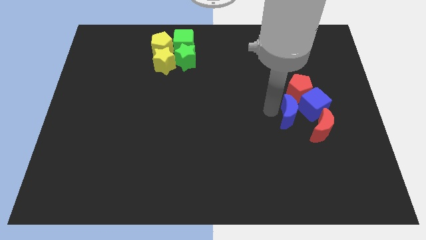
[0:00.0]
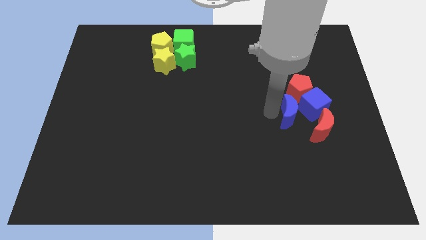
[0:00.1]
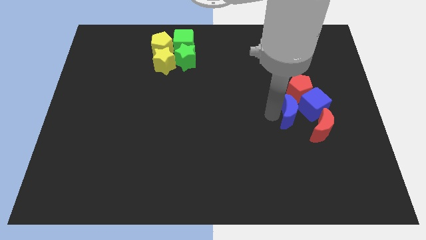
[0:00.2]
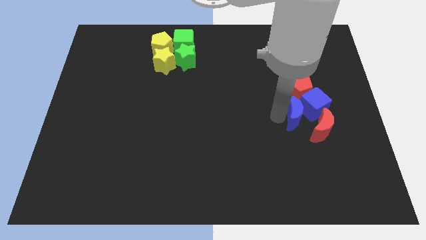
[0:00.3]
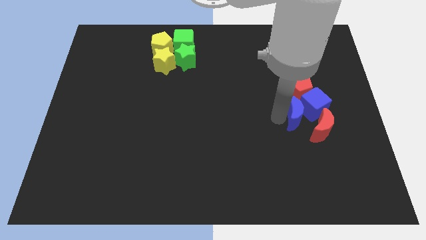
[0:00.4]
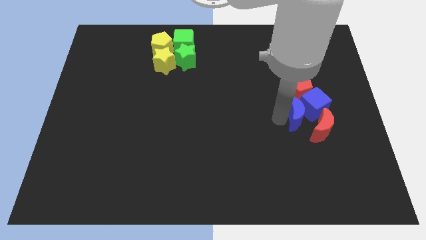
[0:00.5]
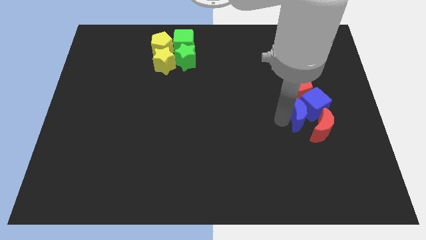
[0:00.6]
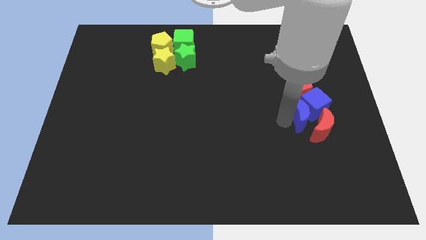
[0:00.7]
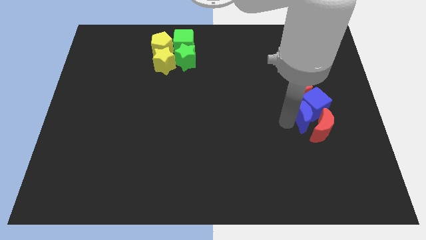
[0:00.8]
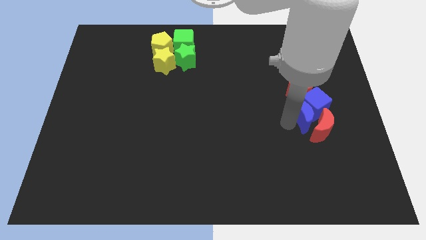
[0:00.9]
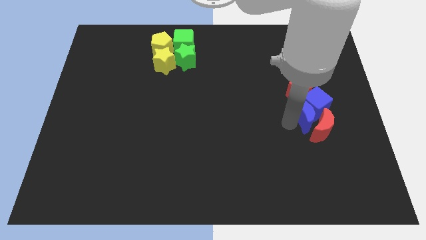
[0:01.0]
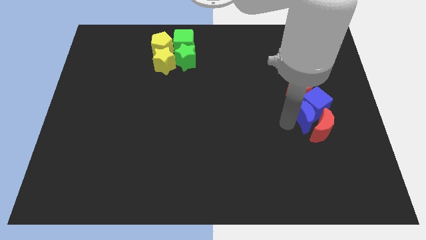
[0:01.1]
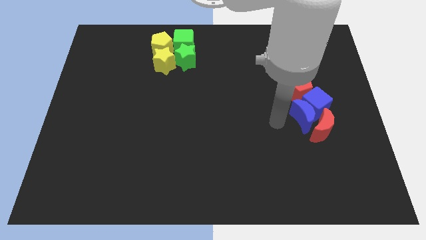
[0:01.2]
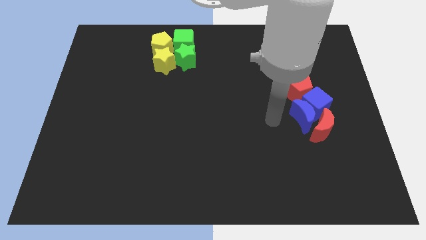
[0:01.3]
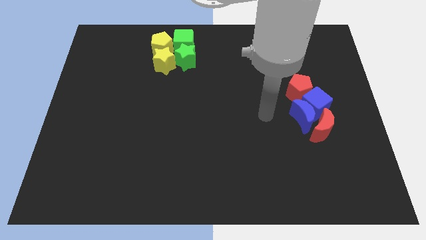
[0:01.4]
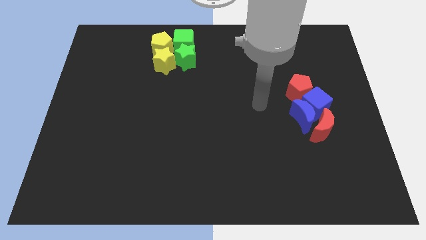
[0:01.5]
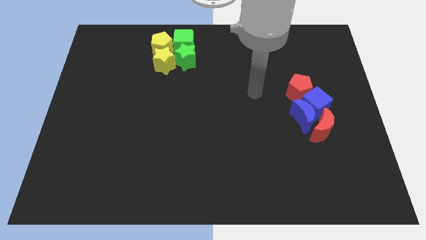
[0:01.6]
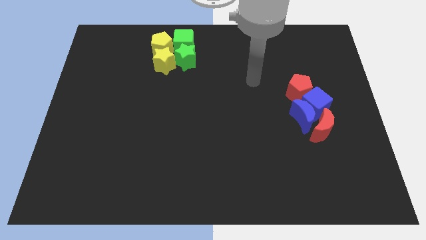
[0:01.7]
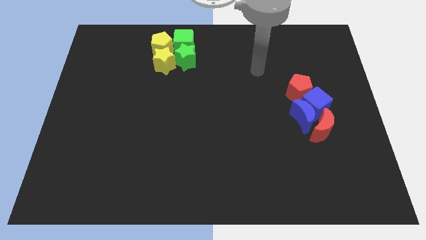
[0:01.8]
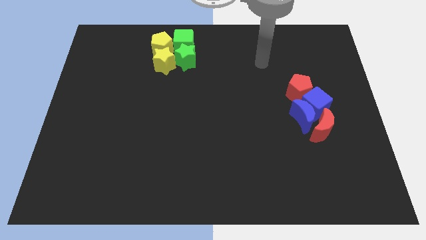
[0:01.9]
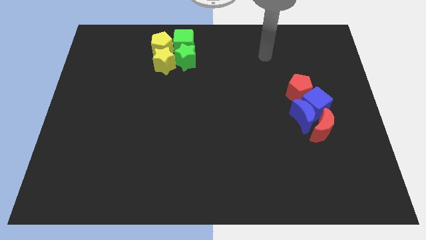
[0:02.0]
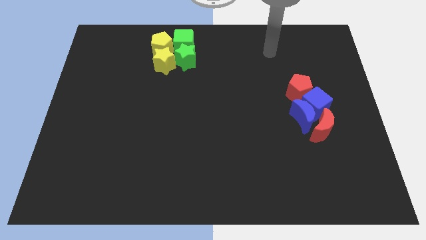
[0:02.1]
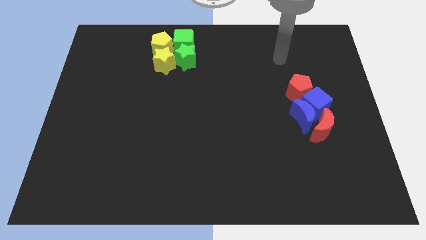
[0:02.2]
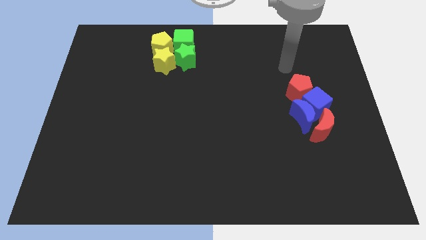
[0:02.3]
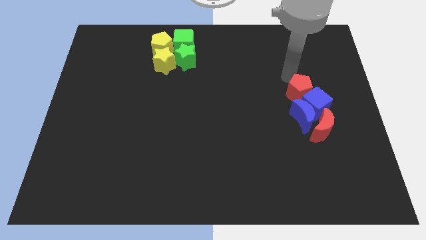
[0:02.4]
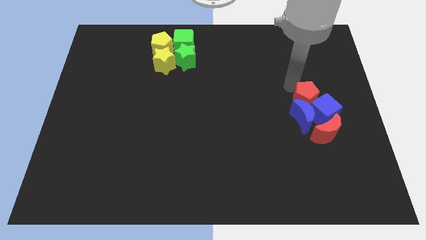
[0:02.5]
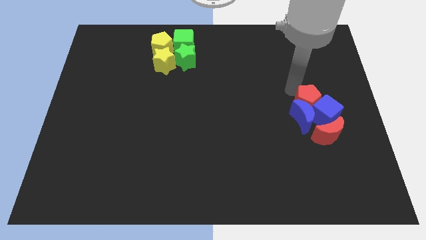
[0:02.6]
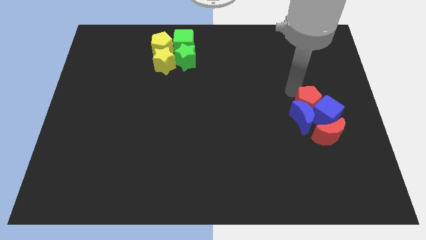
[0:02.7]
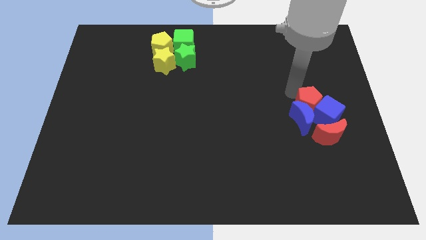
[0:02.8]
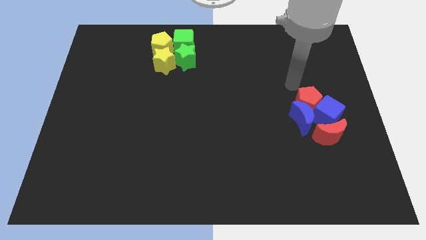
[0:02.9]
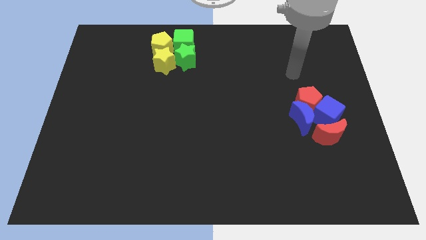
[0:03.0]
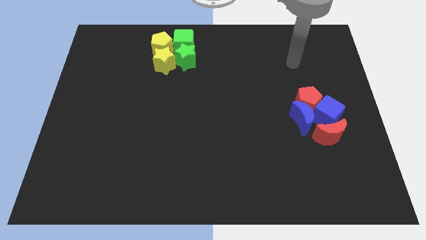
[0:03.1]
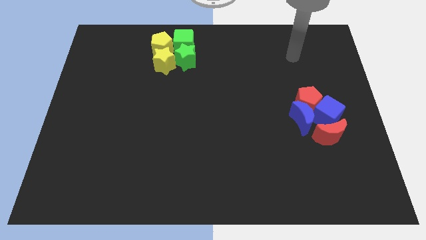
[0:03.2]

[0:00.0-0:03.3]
push red pentagon into the group of blocks

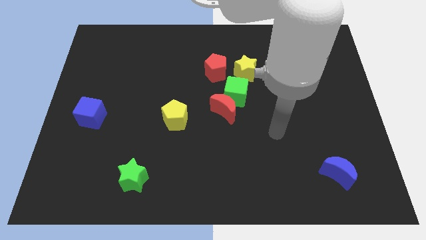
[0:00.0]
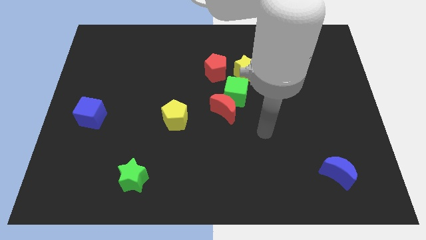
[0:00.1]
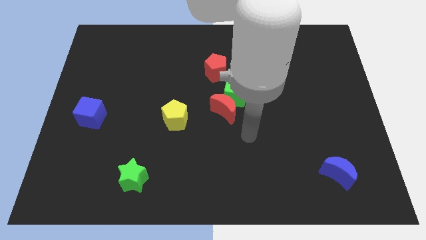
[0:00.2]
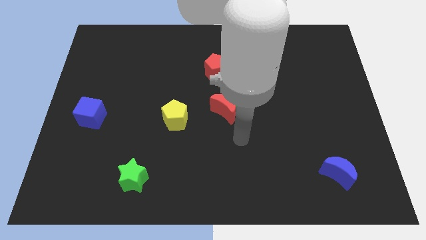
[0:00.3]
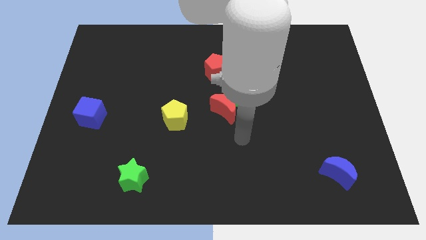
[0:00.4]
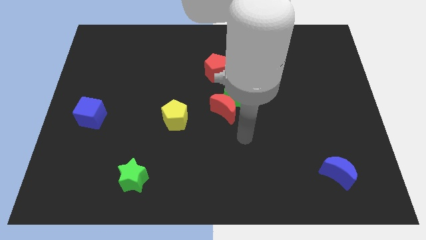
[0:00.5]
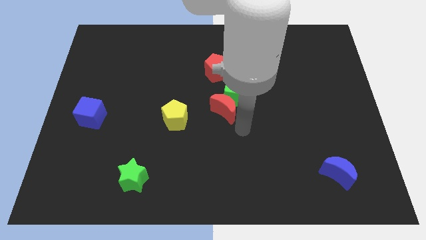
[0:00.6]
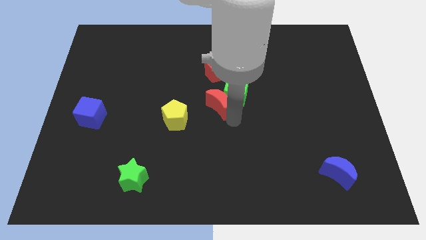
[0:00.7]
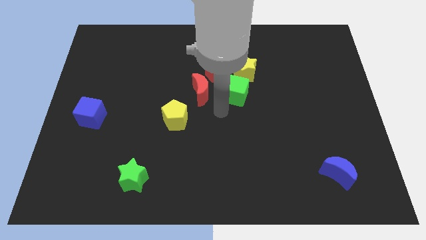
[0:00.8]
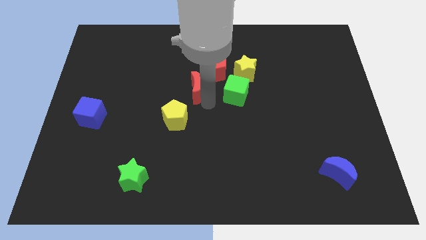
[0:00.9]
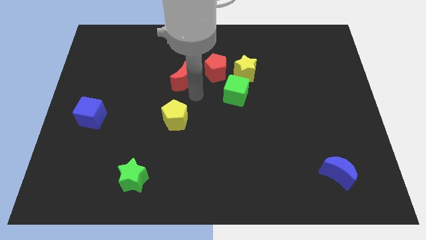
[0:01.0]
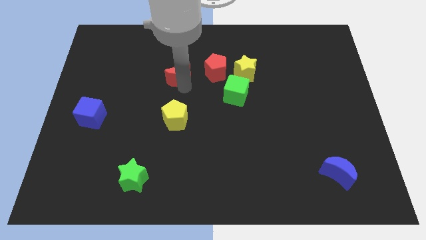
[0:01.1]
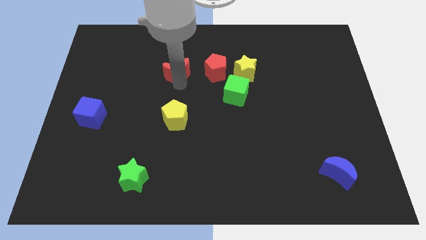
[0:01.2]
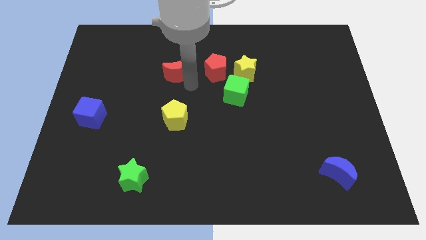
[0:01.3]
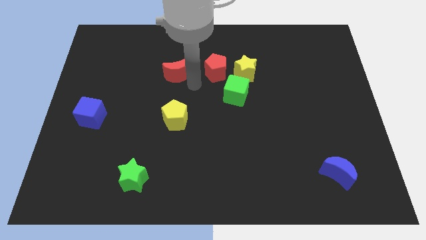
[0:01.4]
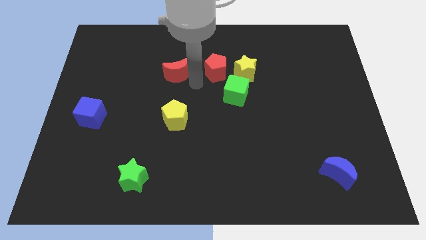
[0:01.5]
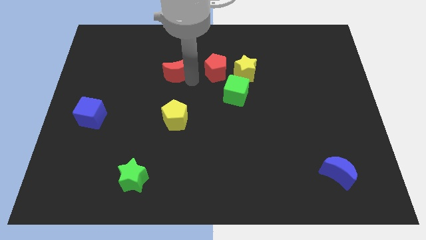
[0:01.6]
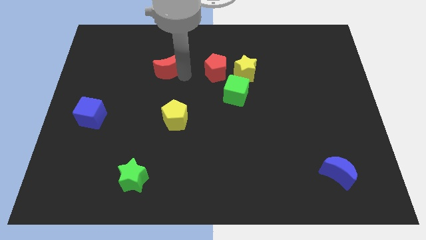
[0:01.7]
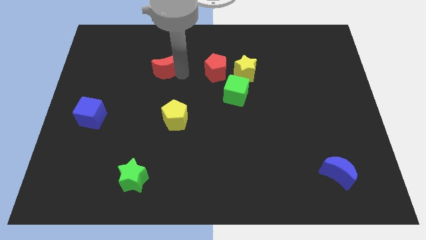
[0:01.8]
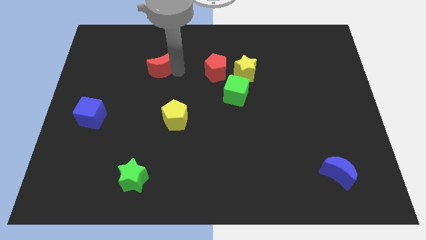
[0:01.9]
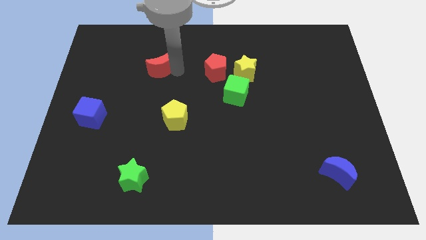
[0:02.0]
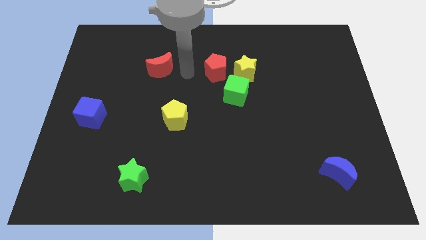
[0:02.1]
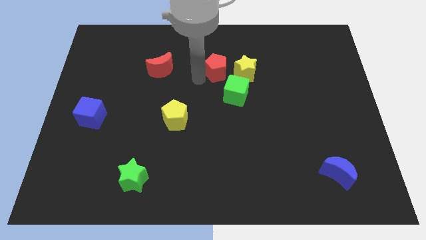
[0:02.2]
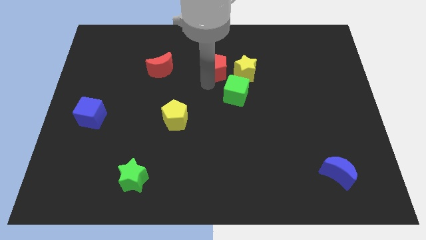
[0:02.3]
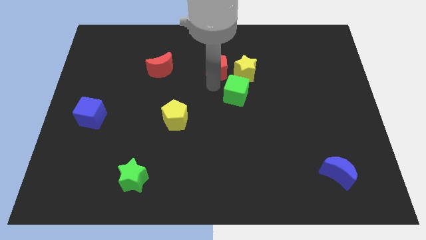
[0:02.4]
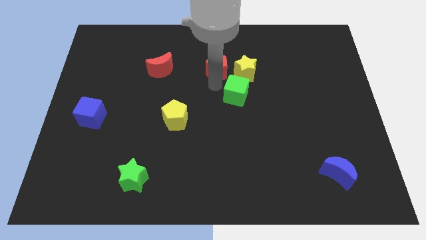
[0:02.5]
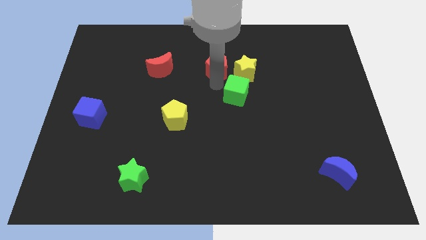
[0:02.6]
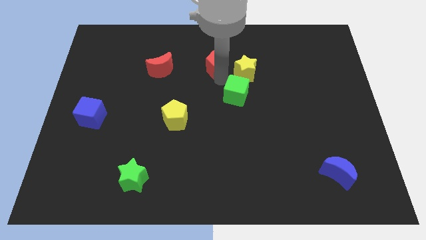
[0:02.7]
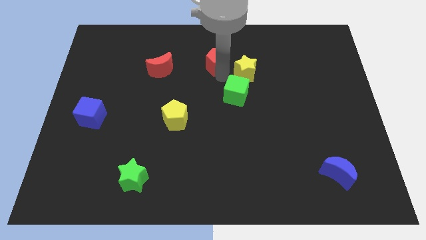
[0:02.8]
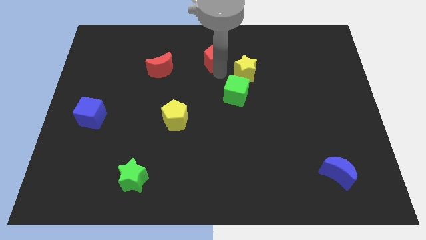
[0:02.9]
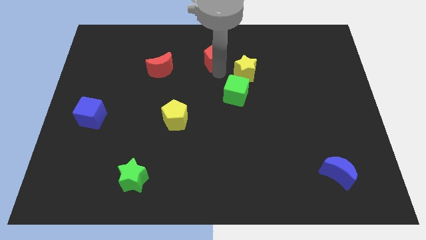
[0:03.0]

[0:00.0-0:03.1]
place red moon parallel left to red pentagon

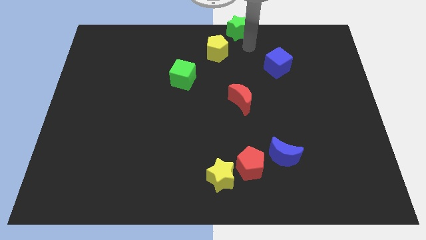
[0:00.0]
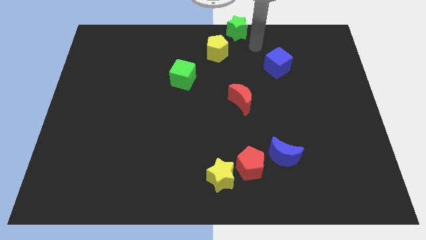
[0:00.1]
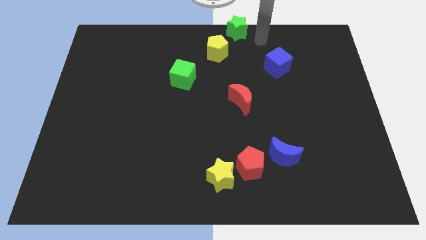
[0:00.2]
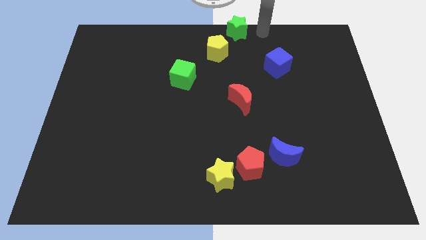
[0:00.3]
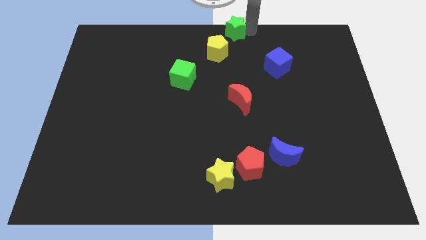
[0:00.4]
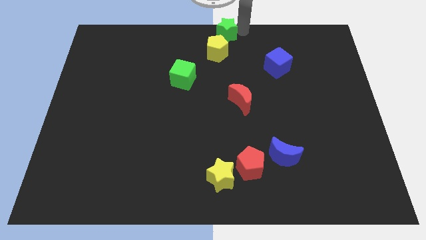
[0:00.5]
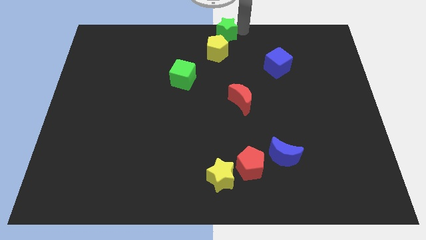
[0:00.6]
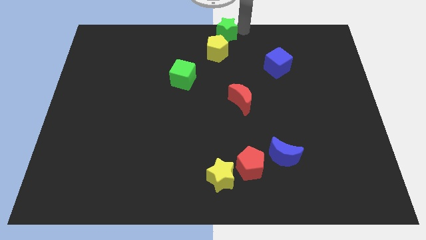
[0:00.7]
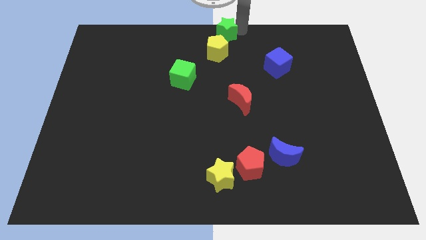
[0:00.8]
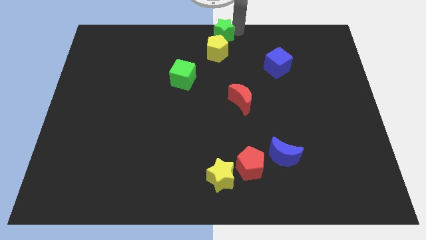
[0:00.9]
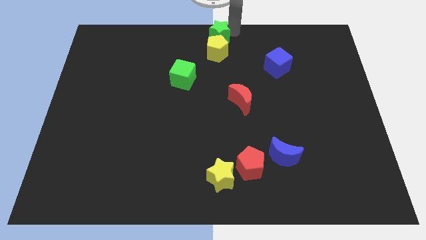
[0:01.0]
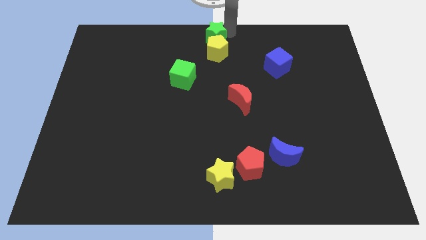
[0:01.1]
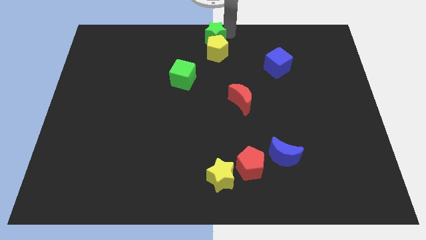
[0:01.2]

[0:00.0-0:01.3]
place the green star above the yellow pentagon

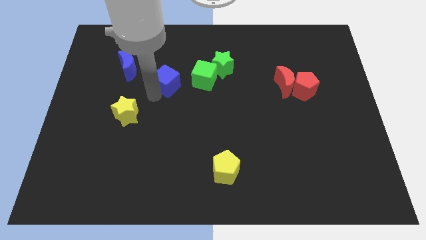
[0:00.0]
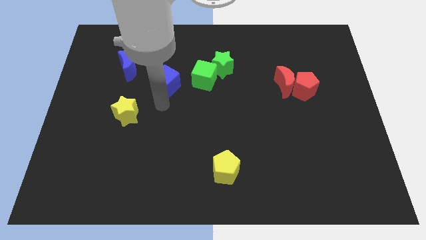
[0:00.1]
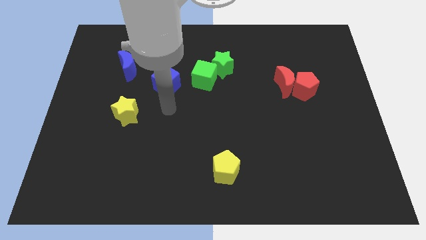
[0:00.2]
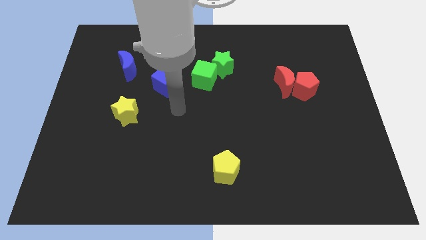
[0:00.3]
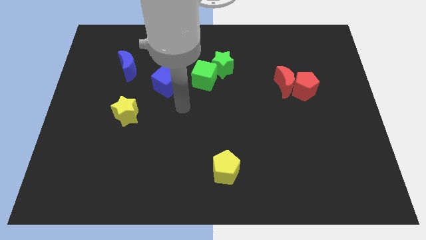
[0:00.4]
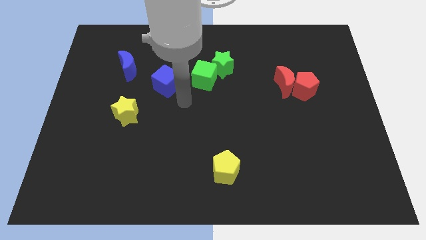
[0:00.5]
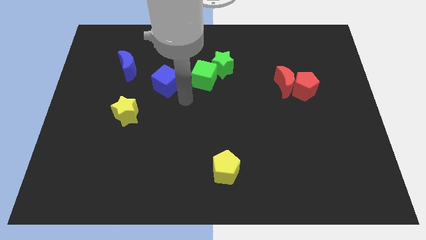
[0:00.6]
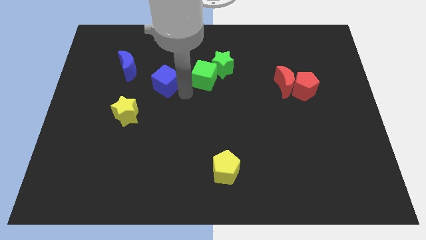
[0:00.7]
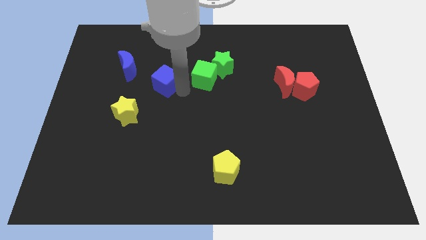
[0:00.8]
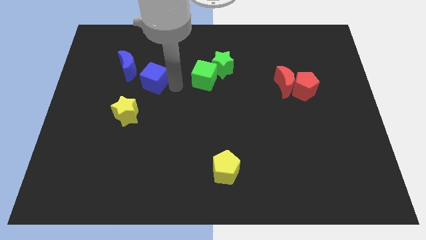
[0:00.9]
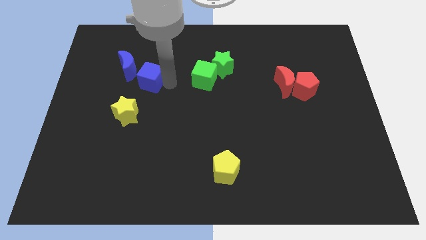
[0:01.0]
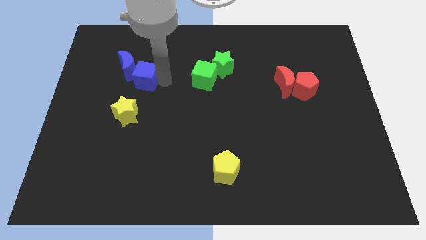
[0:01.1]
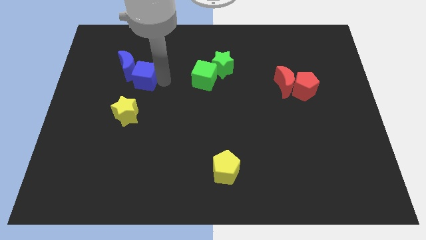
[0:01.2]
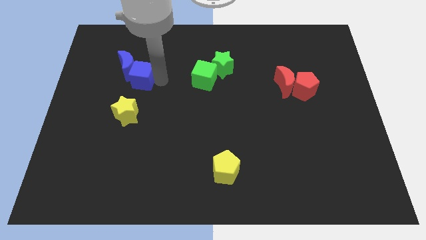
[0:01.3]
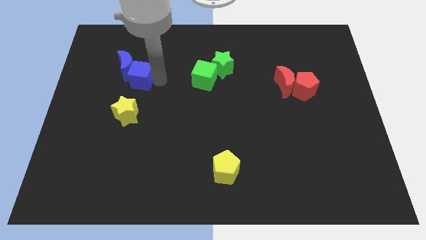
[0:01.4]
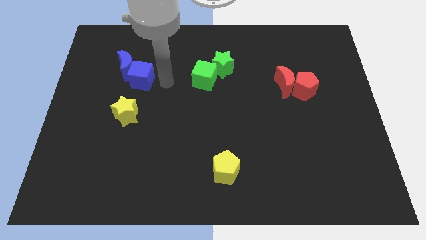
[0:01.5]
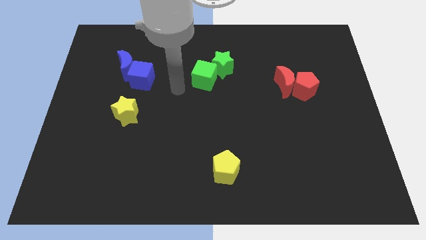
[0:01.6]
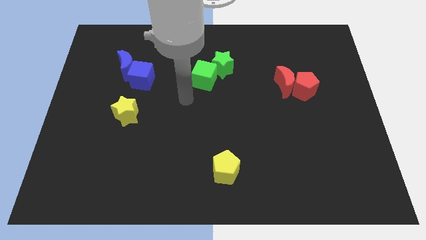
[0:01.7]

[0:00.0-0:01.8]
push the blue cube into the blue moon
